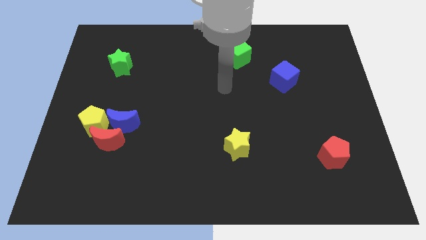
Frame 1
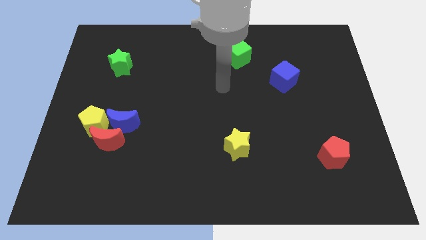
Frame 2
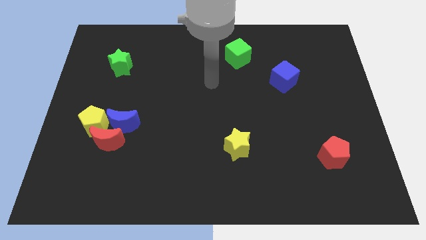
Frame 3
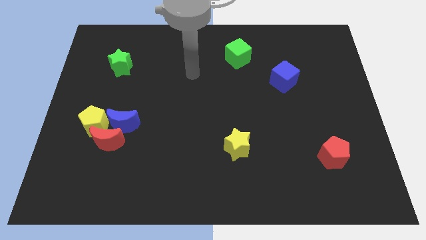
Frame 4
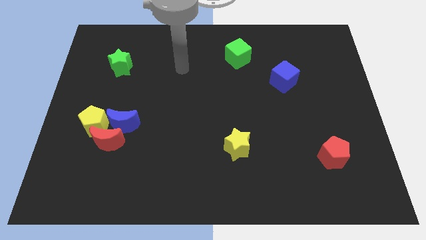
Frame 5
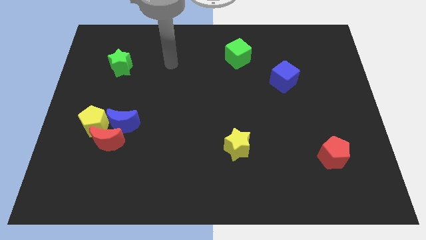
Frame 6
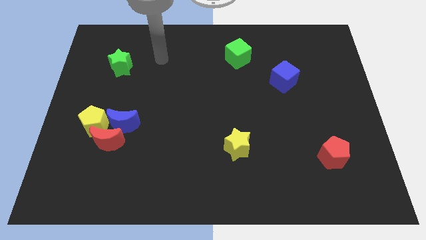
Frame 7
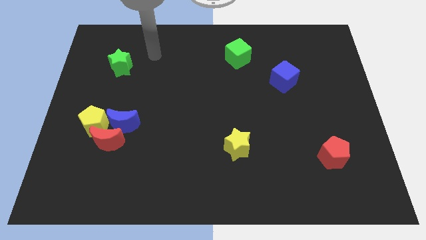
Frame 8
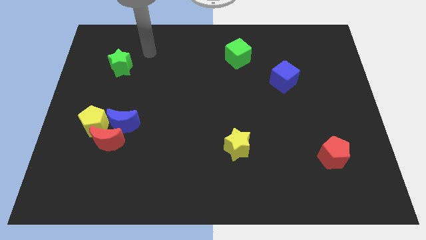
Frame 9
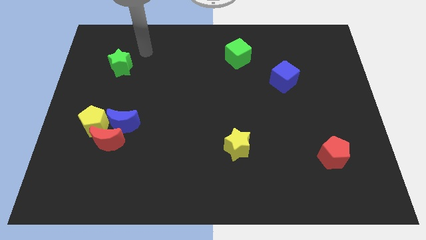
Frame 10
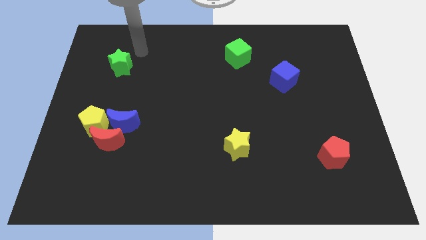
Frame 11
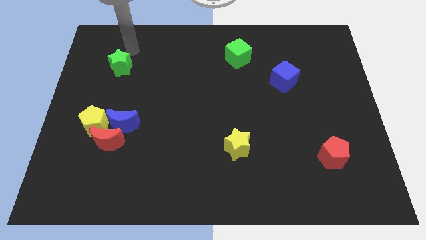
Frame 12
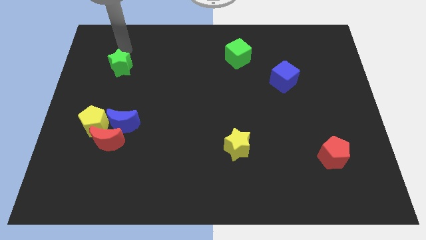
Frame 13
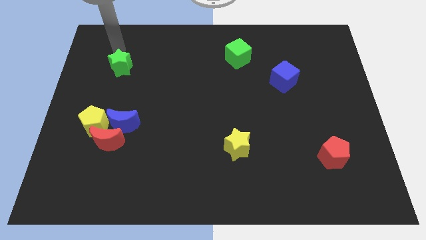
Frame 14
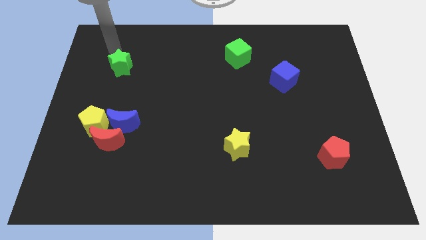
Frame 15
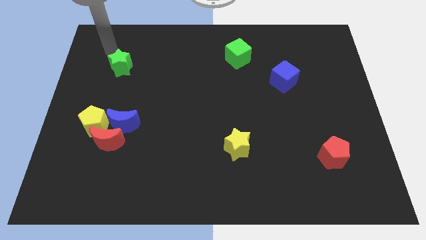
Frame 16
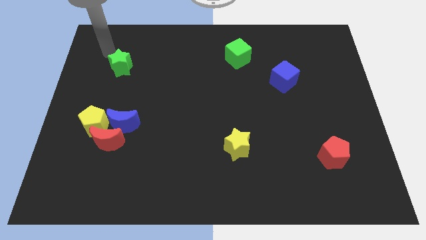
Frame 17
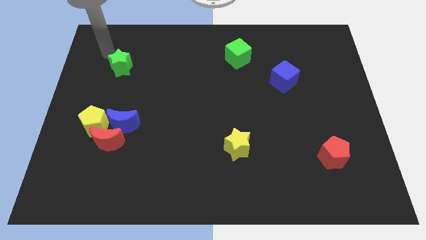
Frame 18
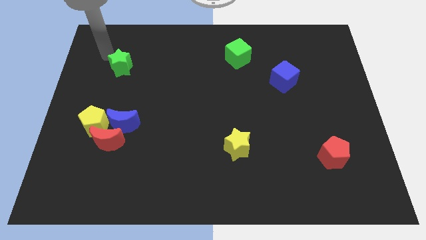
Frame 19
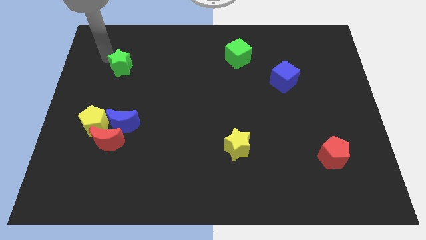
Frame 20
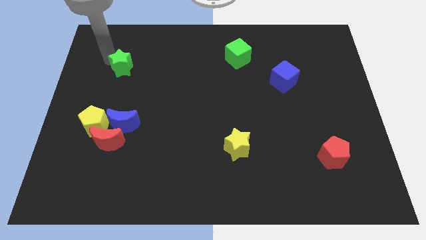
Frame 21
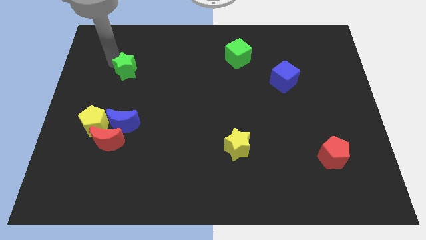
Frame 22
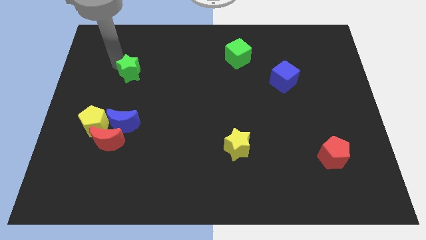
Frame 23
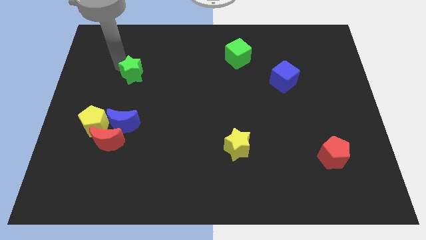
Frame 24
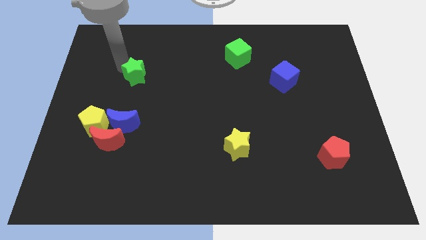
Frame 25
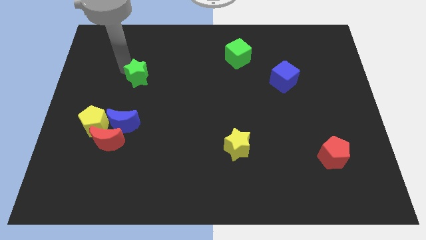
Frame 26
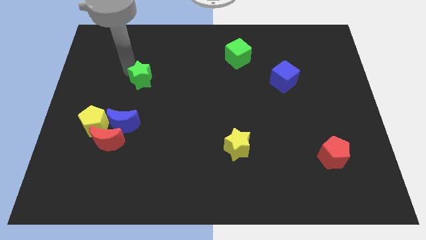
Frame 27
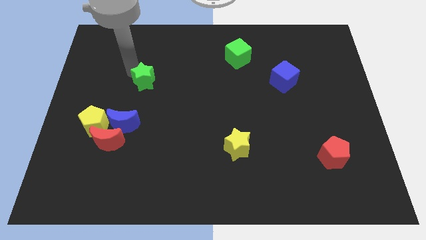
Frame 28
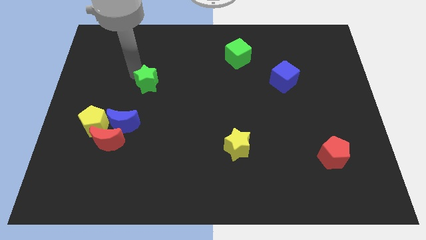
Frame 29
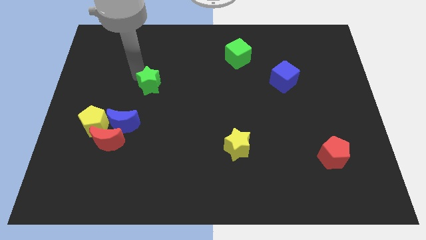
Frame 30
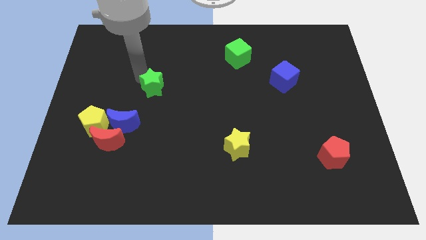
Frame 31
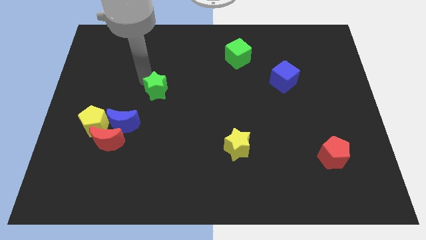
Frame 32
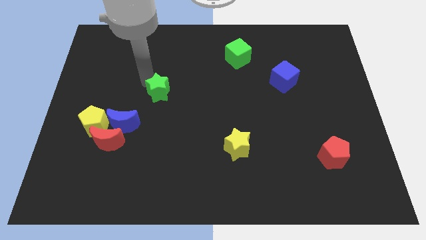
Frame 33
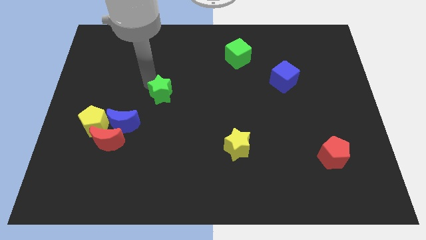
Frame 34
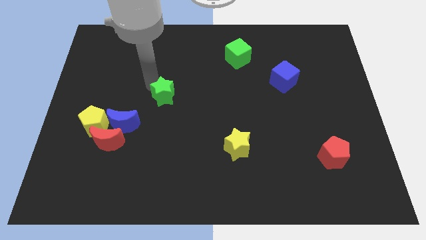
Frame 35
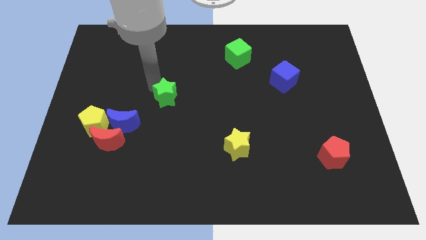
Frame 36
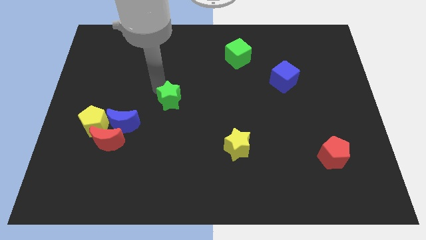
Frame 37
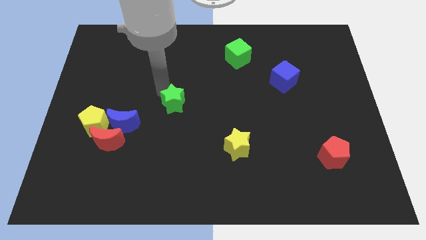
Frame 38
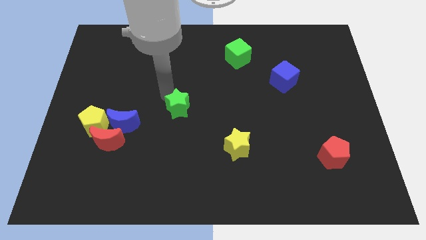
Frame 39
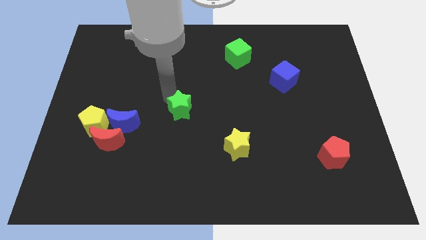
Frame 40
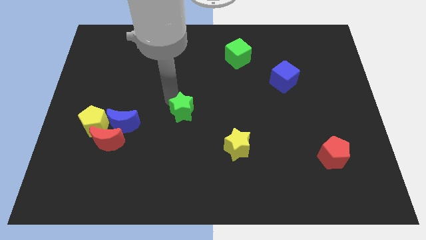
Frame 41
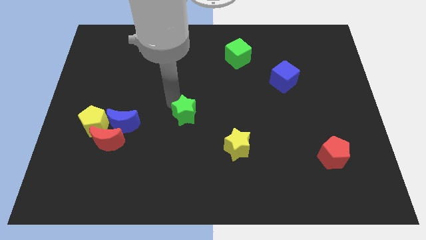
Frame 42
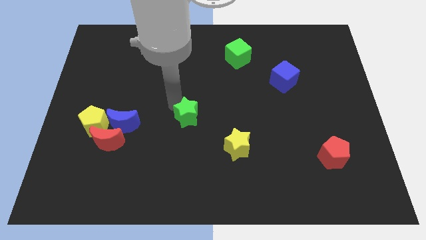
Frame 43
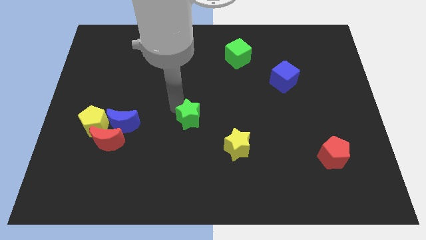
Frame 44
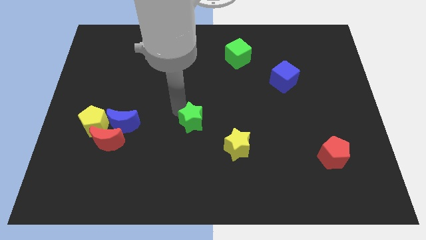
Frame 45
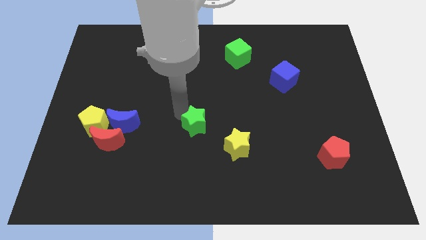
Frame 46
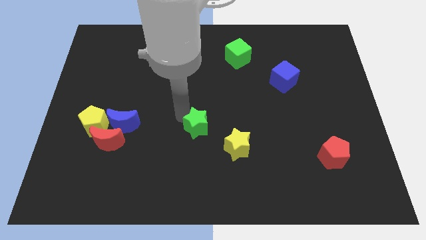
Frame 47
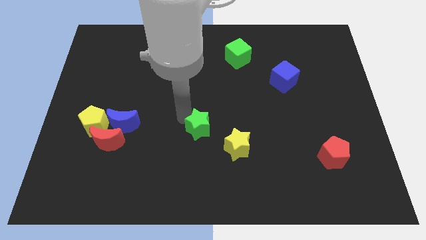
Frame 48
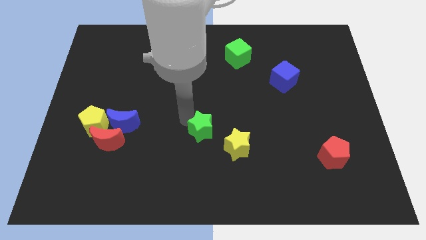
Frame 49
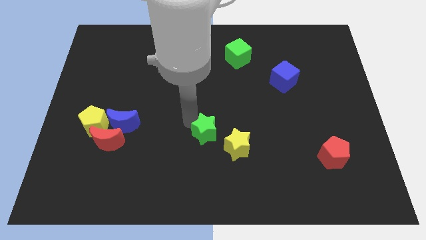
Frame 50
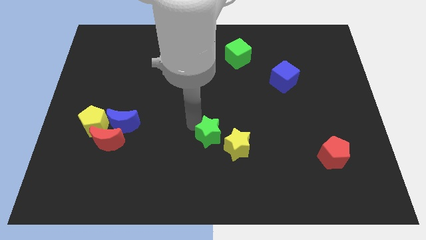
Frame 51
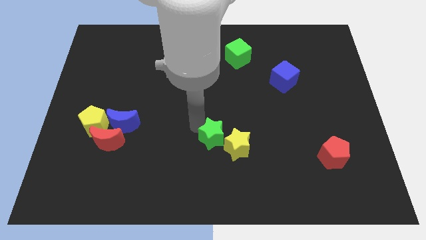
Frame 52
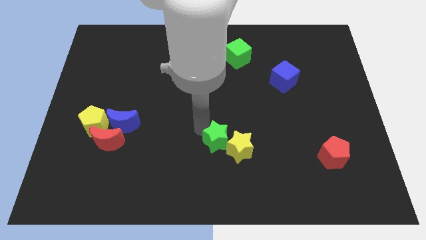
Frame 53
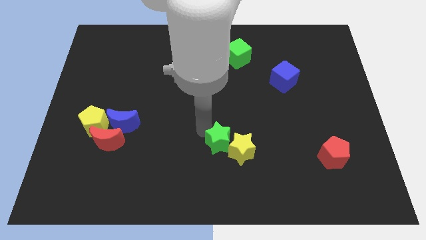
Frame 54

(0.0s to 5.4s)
put the green star towards the yellow star

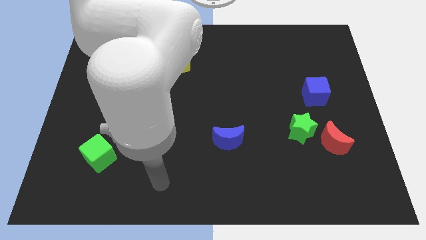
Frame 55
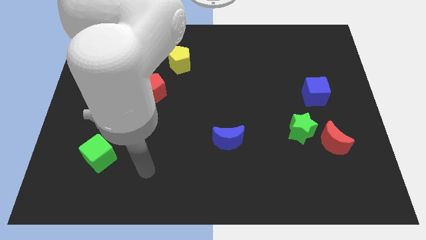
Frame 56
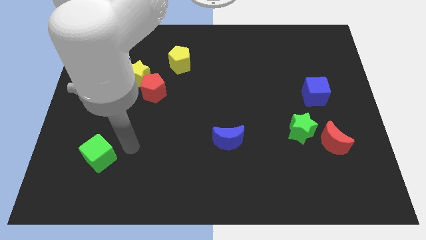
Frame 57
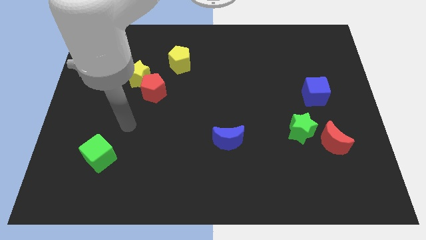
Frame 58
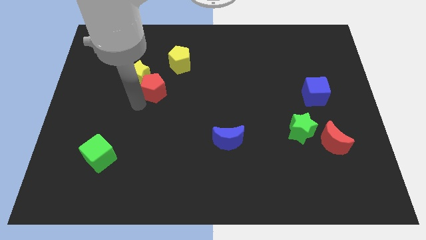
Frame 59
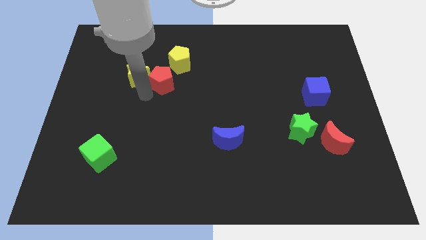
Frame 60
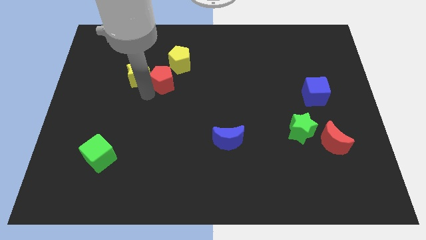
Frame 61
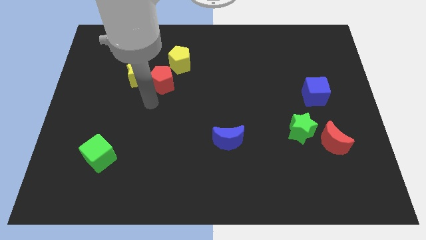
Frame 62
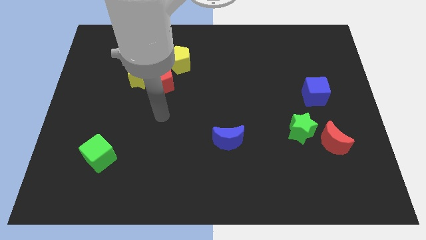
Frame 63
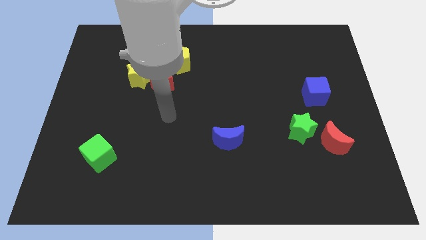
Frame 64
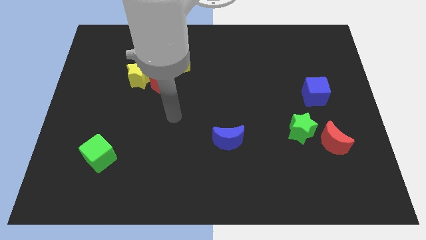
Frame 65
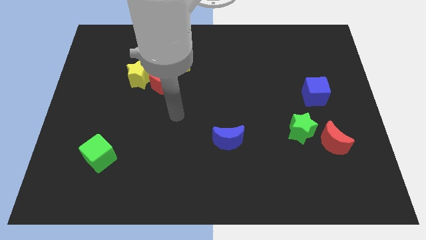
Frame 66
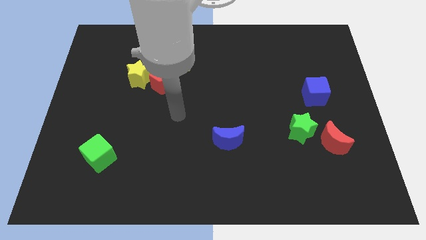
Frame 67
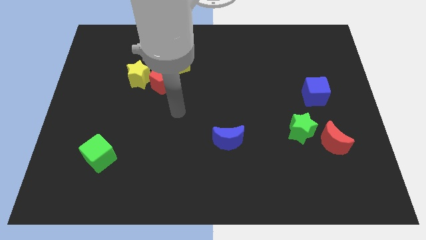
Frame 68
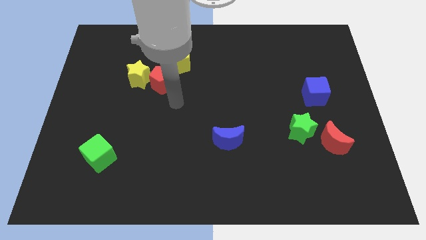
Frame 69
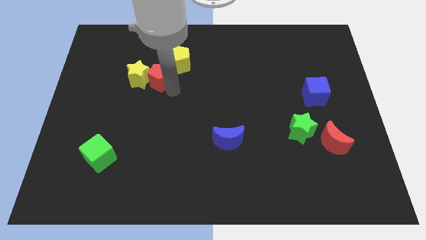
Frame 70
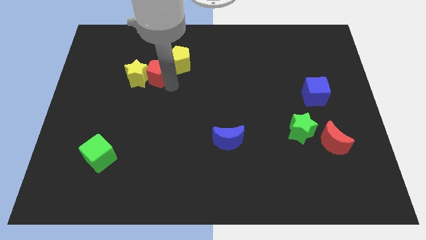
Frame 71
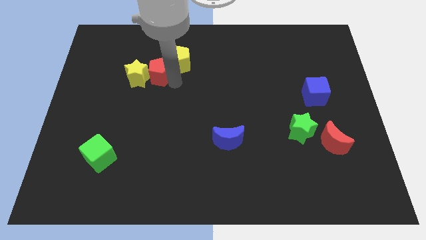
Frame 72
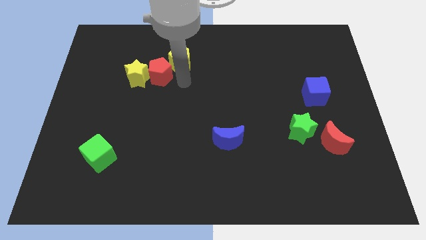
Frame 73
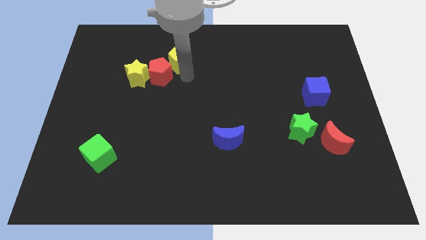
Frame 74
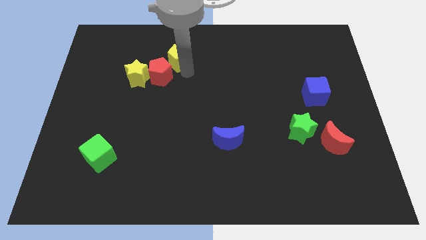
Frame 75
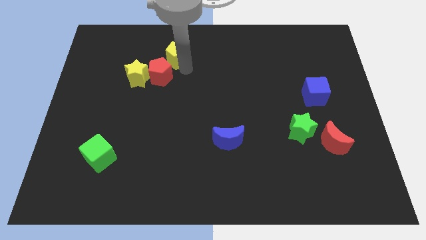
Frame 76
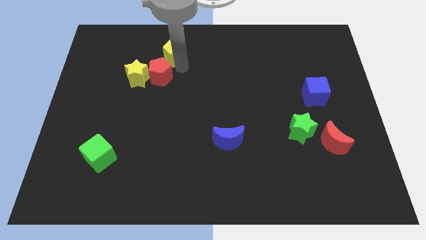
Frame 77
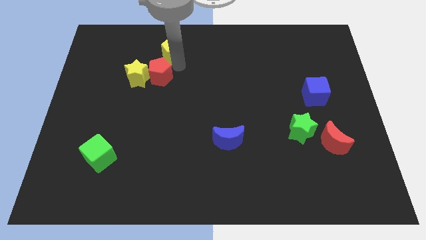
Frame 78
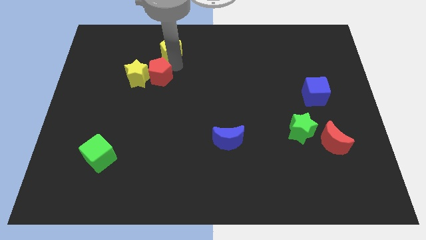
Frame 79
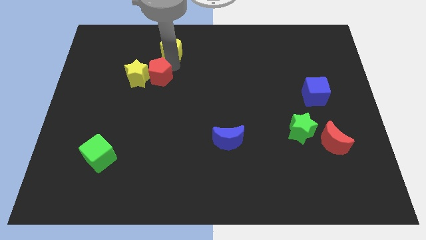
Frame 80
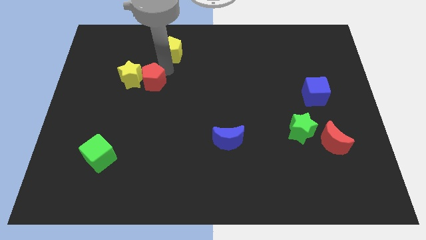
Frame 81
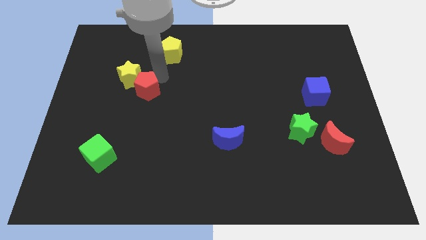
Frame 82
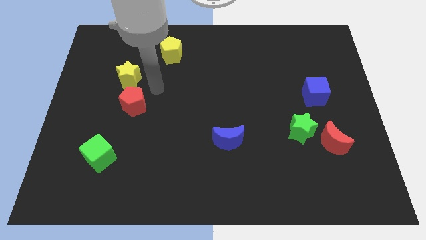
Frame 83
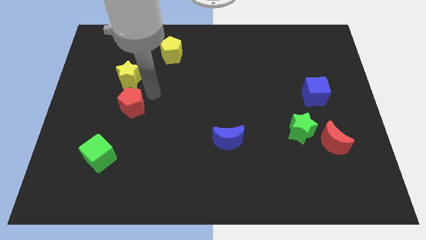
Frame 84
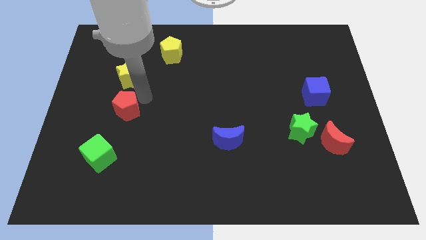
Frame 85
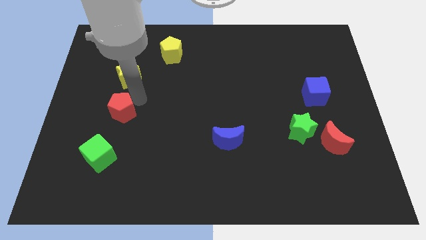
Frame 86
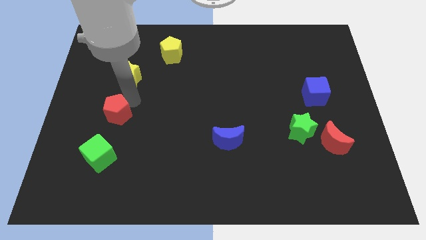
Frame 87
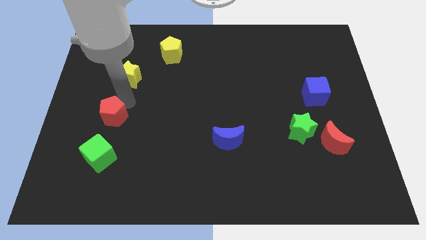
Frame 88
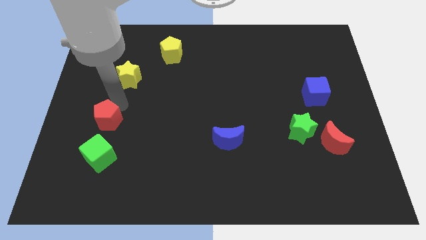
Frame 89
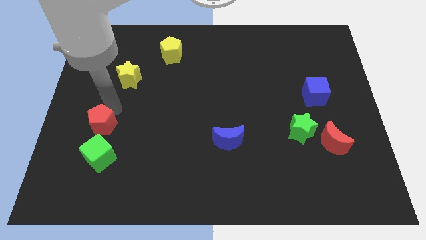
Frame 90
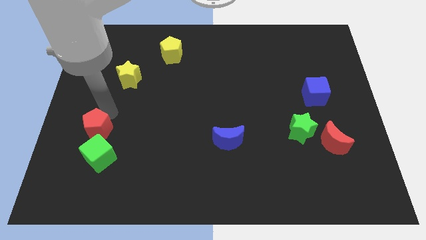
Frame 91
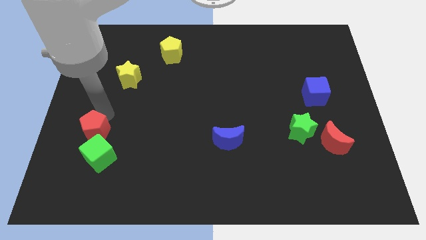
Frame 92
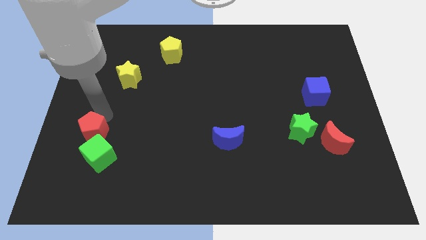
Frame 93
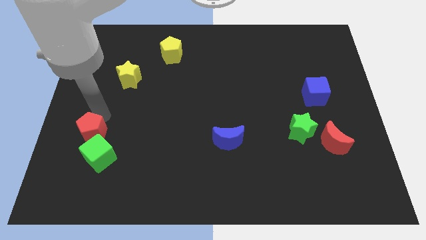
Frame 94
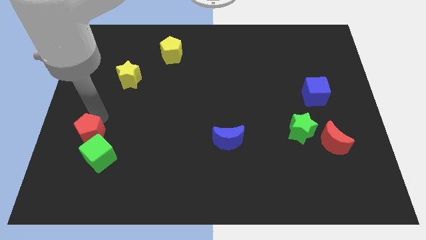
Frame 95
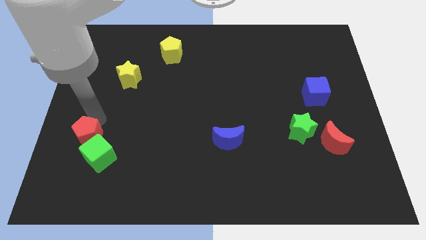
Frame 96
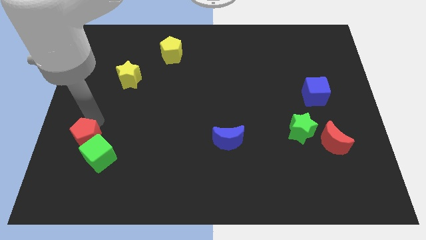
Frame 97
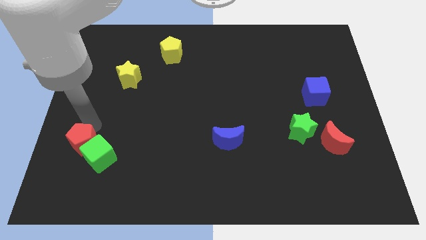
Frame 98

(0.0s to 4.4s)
move the red pentagon next to the green cube
